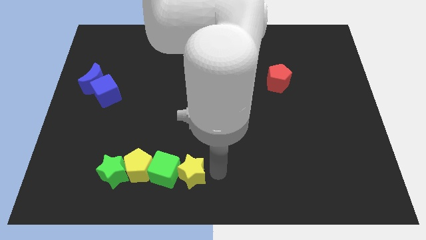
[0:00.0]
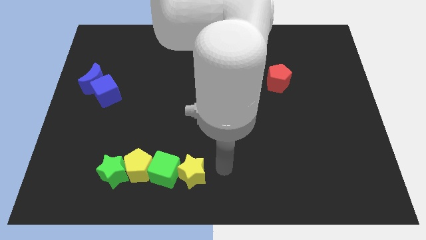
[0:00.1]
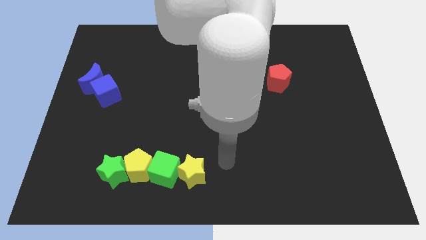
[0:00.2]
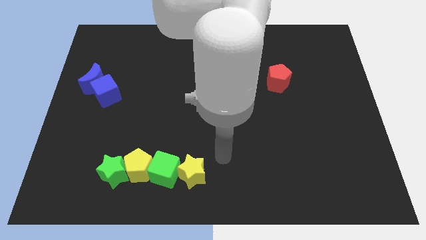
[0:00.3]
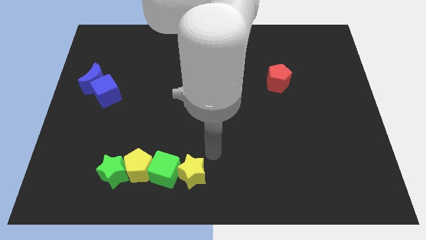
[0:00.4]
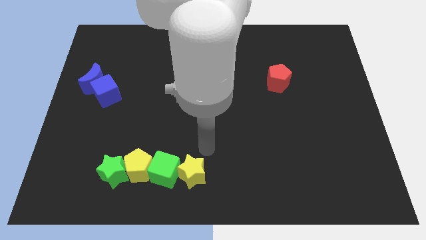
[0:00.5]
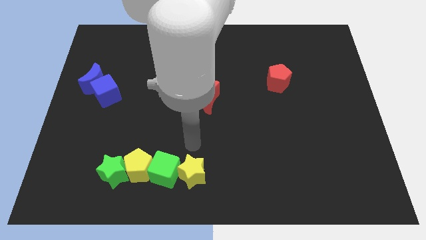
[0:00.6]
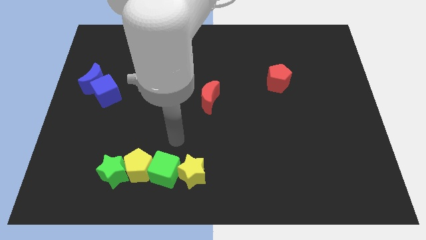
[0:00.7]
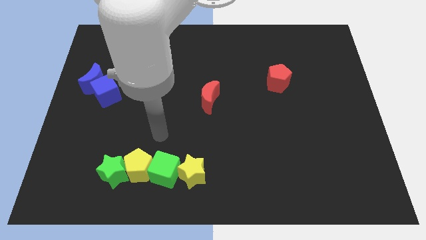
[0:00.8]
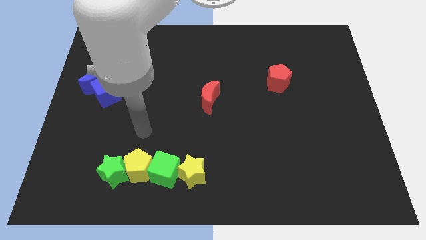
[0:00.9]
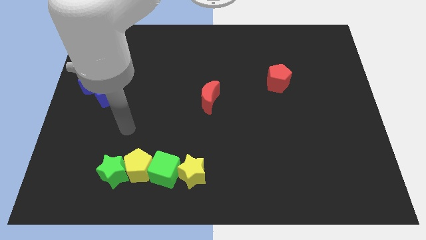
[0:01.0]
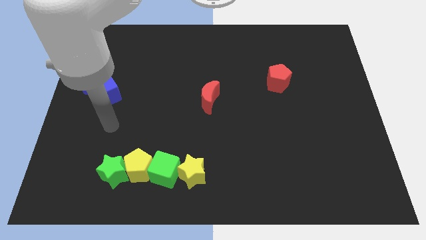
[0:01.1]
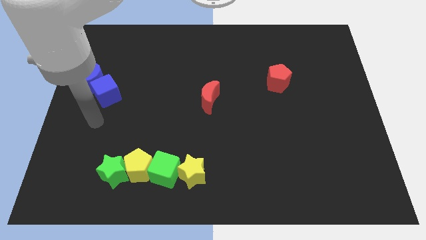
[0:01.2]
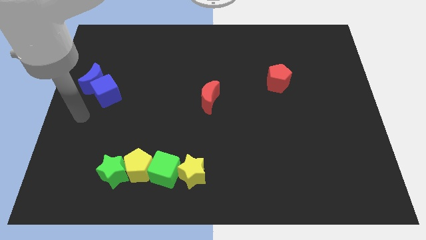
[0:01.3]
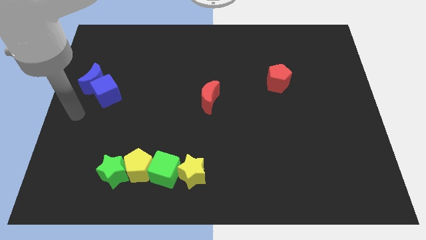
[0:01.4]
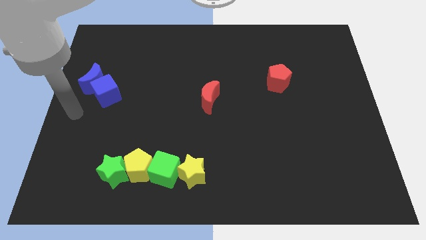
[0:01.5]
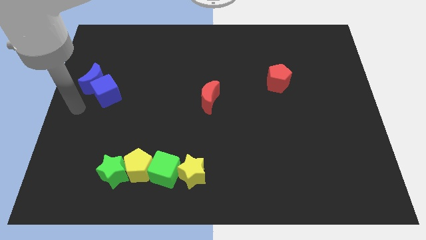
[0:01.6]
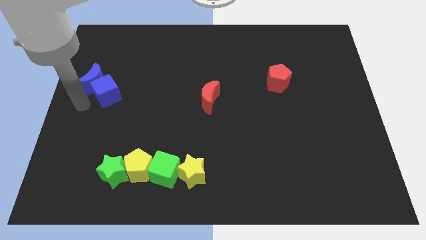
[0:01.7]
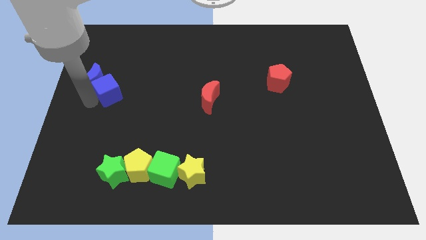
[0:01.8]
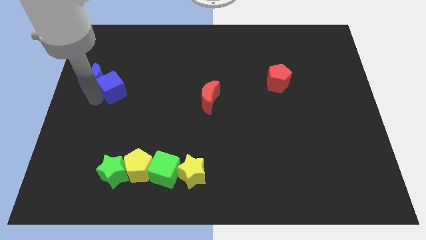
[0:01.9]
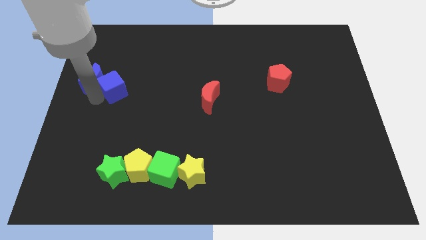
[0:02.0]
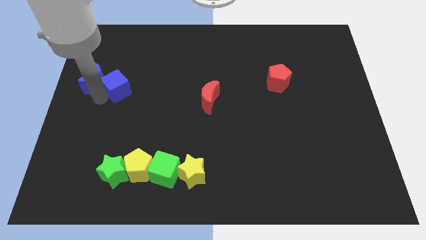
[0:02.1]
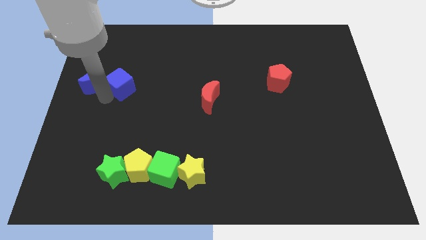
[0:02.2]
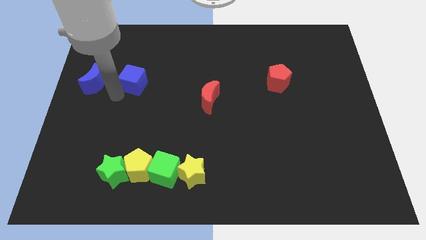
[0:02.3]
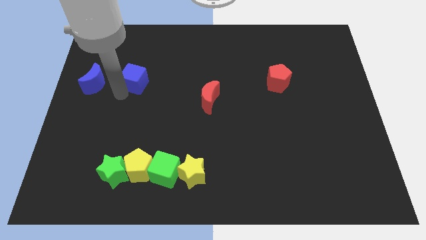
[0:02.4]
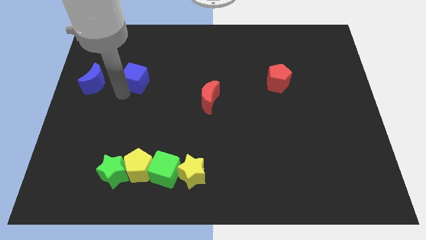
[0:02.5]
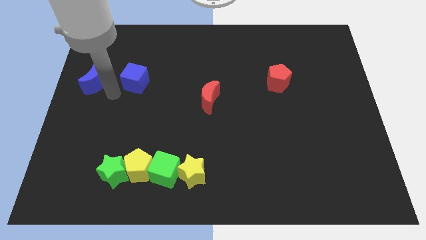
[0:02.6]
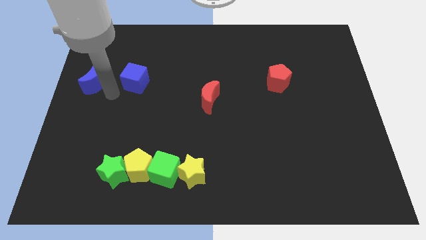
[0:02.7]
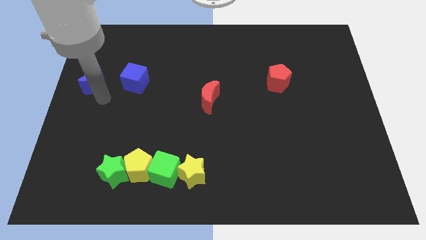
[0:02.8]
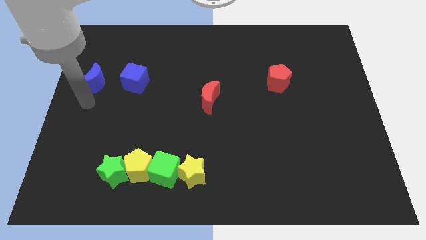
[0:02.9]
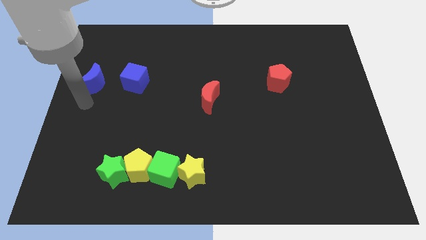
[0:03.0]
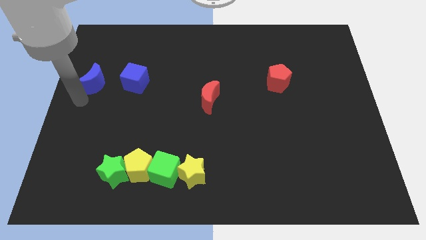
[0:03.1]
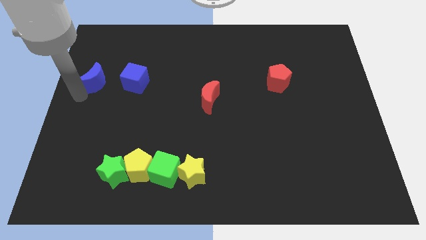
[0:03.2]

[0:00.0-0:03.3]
place the blue cube at the right side of the blue crescent

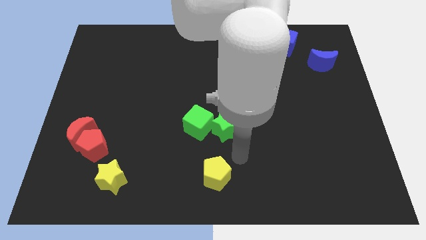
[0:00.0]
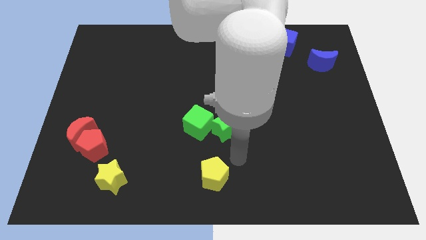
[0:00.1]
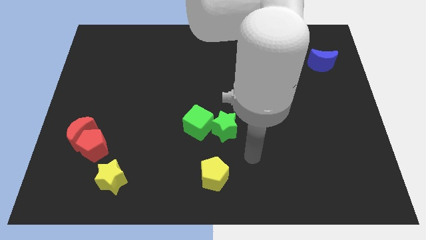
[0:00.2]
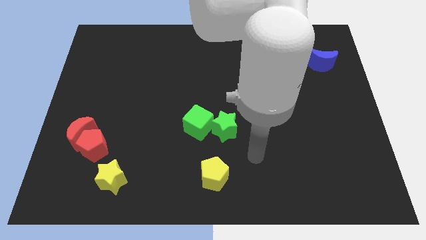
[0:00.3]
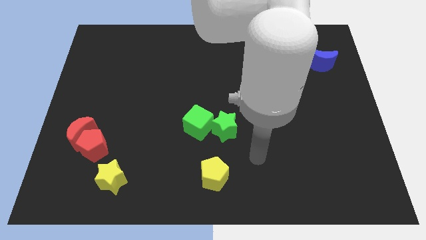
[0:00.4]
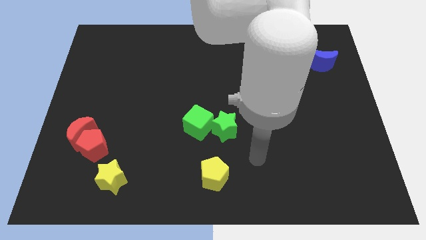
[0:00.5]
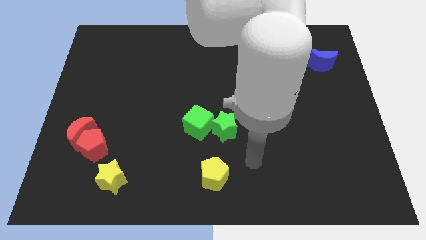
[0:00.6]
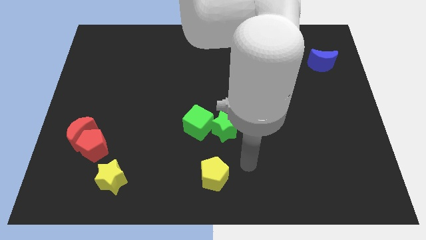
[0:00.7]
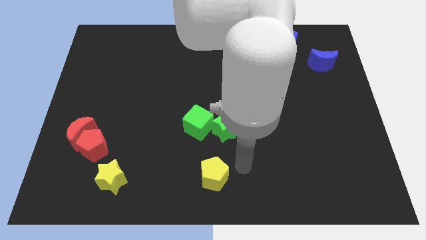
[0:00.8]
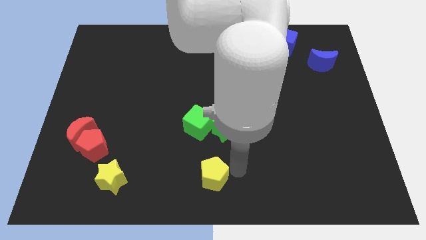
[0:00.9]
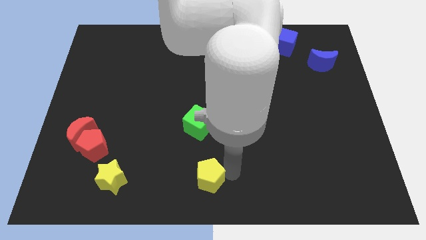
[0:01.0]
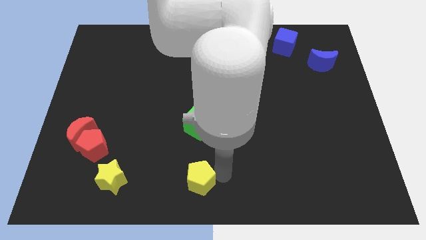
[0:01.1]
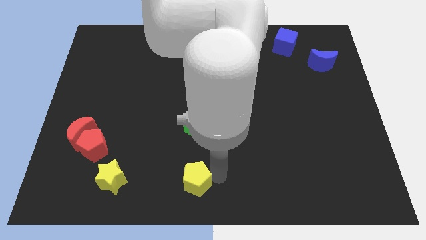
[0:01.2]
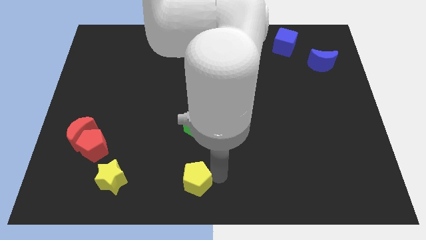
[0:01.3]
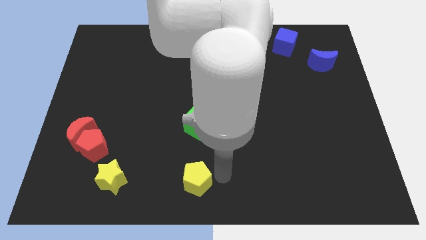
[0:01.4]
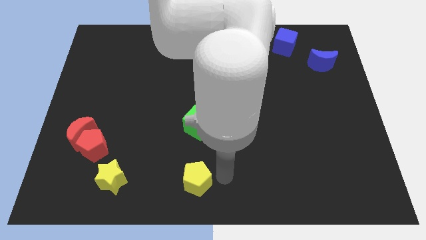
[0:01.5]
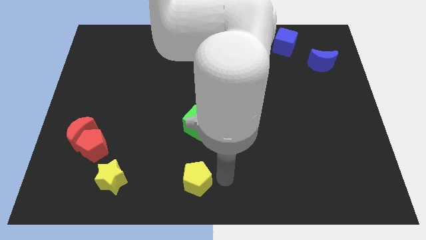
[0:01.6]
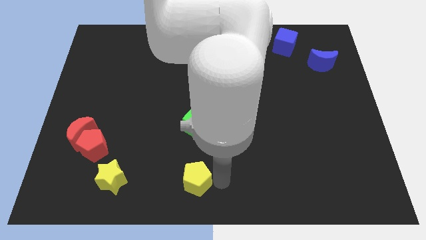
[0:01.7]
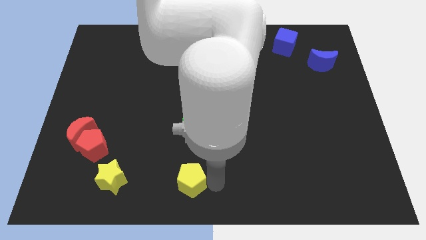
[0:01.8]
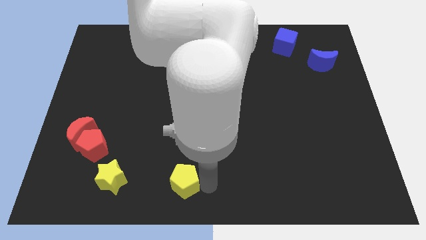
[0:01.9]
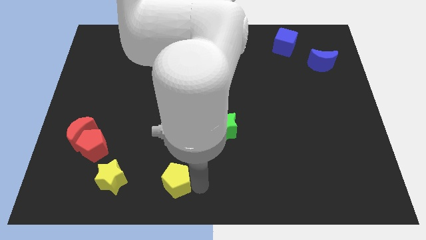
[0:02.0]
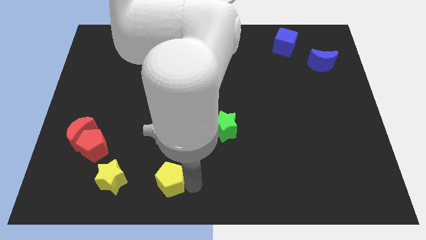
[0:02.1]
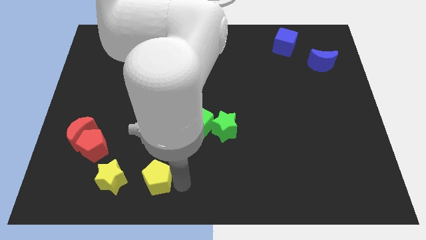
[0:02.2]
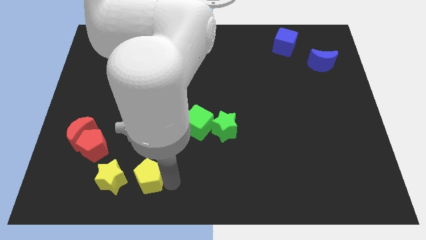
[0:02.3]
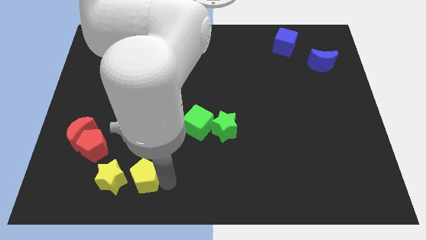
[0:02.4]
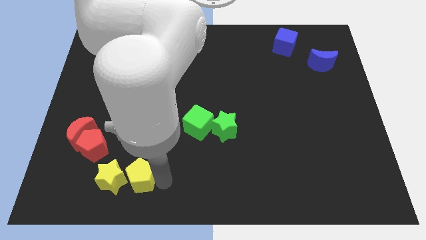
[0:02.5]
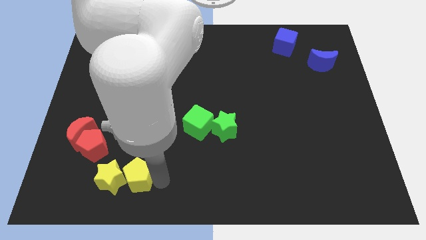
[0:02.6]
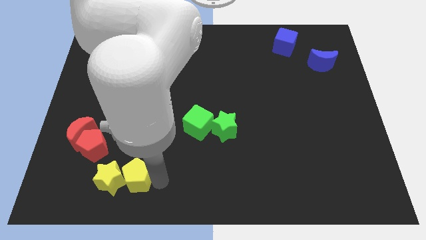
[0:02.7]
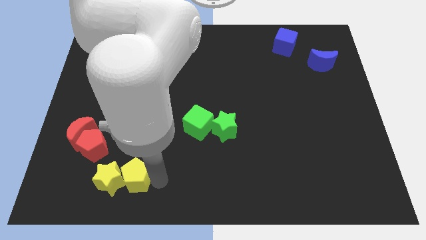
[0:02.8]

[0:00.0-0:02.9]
push yellow pentagon towards yellow star

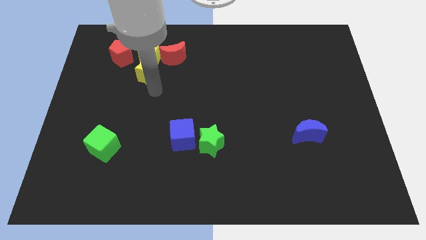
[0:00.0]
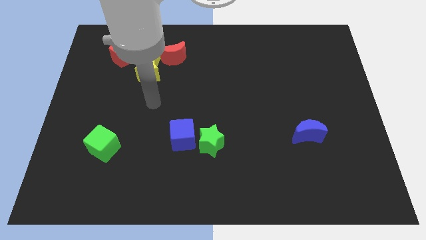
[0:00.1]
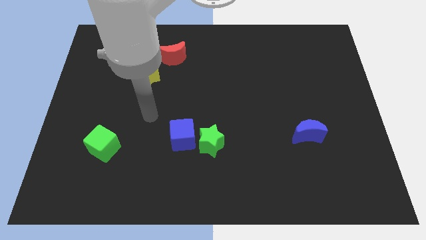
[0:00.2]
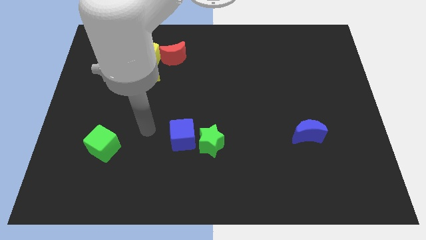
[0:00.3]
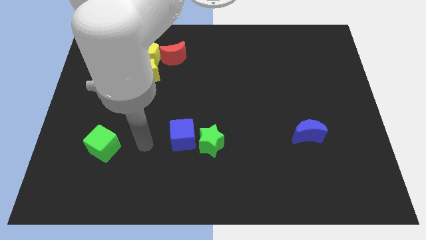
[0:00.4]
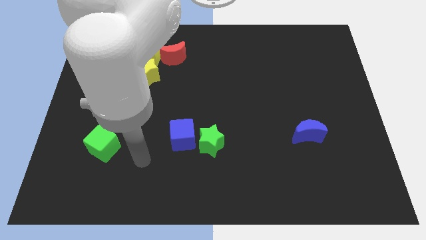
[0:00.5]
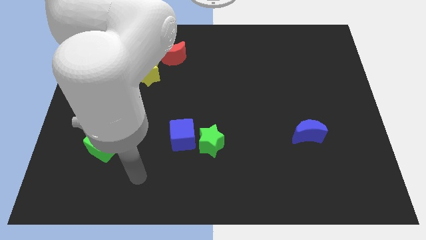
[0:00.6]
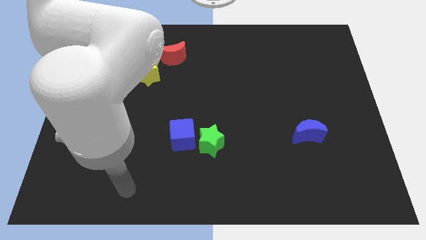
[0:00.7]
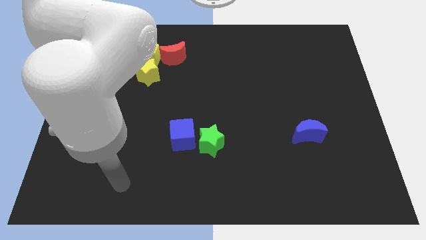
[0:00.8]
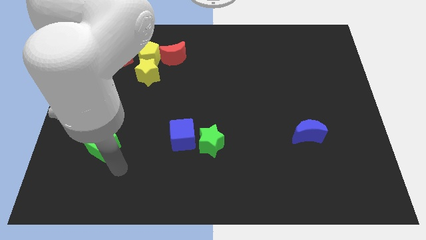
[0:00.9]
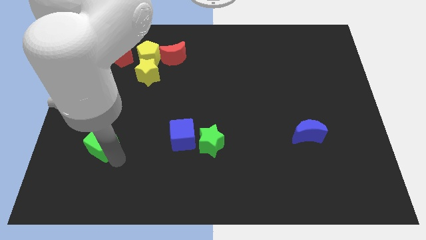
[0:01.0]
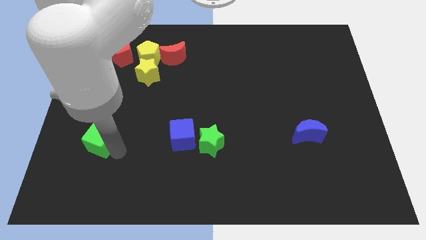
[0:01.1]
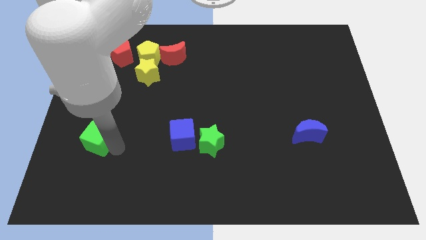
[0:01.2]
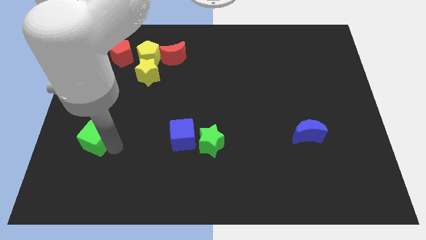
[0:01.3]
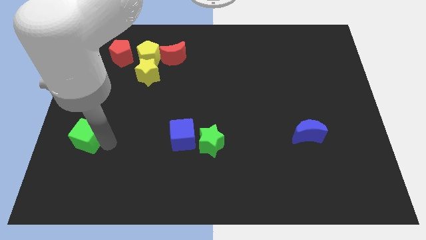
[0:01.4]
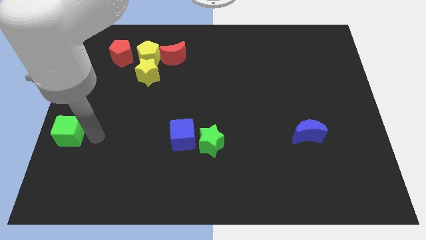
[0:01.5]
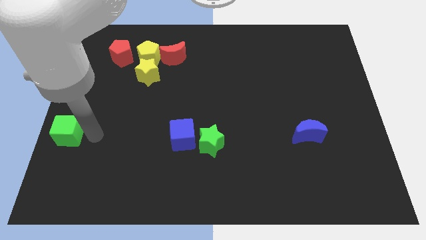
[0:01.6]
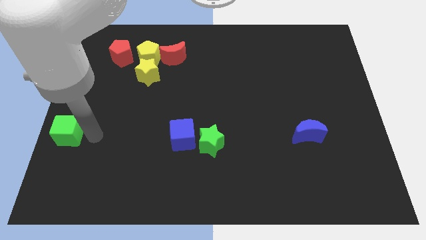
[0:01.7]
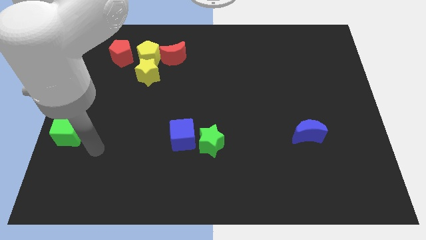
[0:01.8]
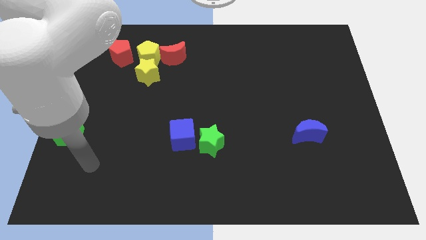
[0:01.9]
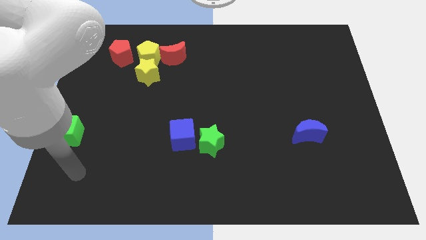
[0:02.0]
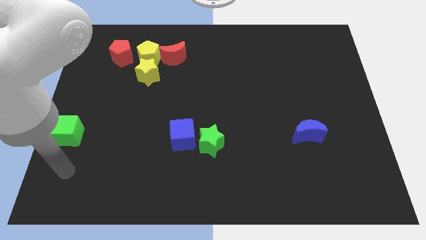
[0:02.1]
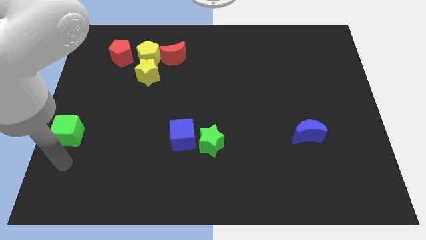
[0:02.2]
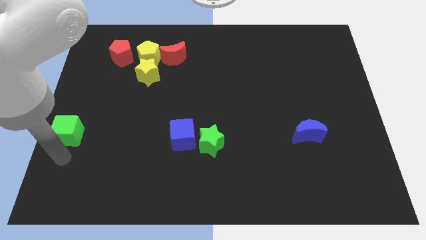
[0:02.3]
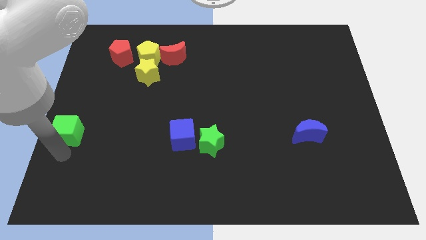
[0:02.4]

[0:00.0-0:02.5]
move the green cube to the left

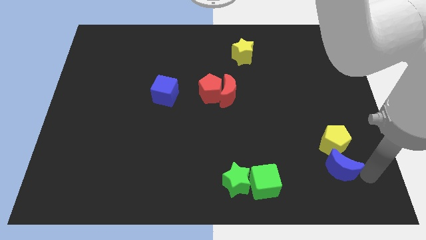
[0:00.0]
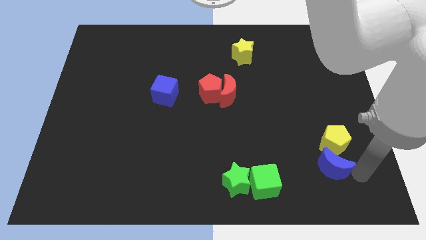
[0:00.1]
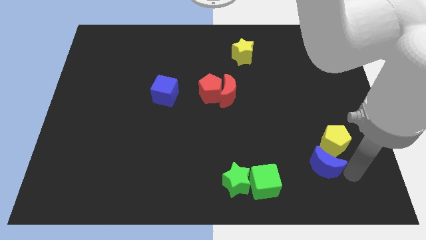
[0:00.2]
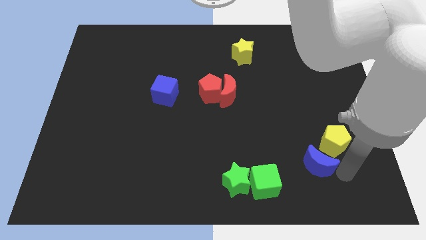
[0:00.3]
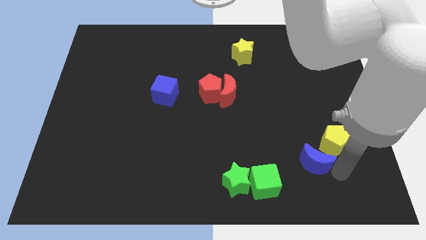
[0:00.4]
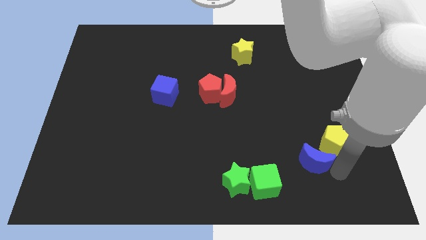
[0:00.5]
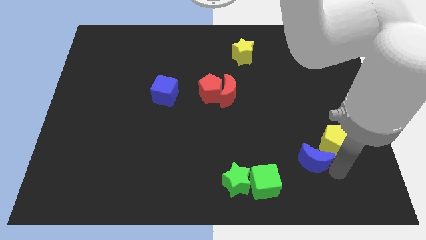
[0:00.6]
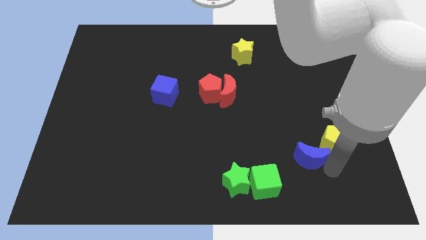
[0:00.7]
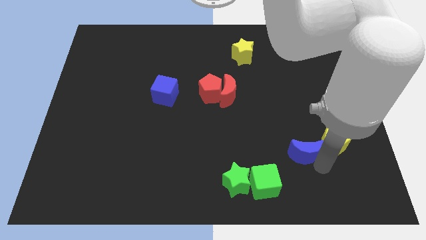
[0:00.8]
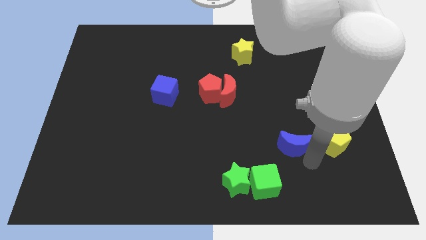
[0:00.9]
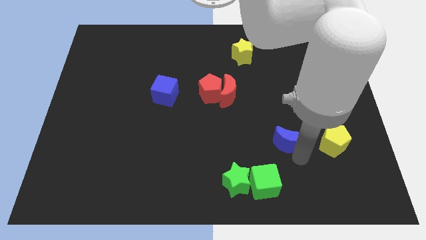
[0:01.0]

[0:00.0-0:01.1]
place blue moon to the left of the yellow pentagon
